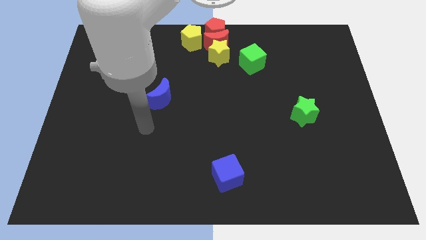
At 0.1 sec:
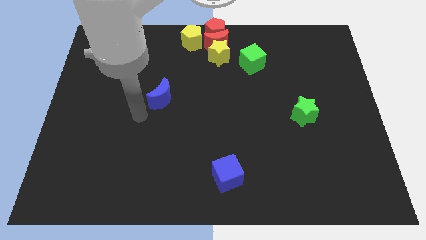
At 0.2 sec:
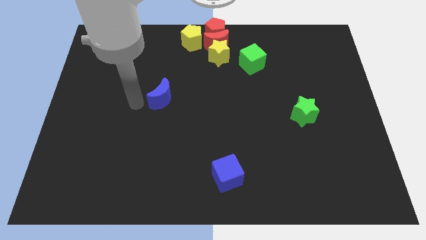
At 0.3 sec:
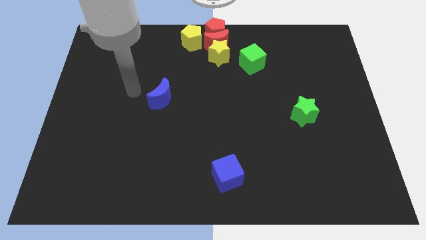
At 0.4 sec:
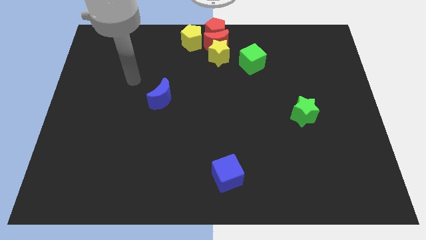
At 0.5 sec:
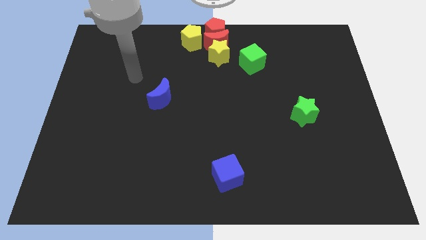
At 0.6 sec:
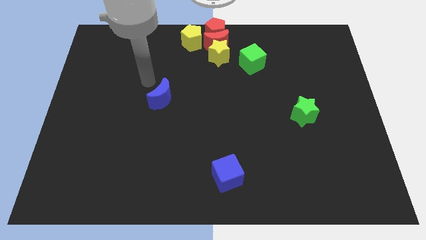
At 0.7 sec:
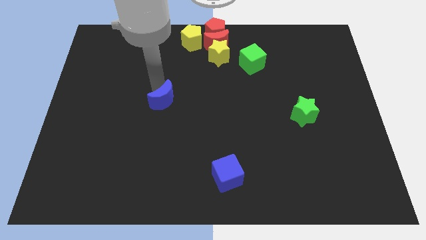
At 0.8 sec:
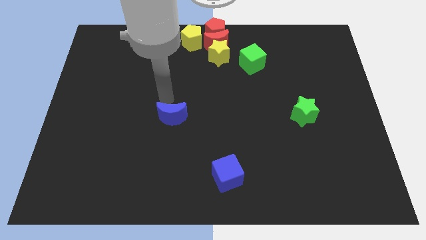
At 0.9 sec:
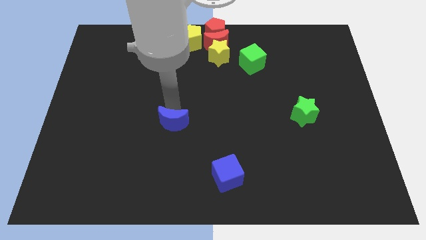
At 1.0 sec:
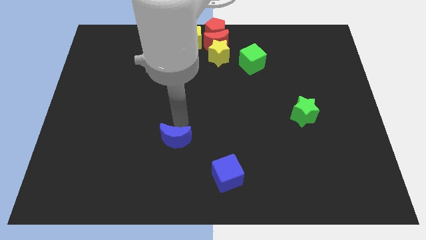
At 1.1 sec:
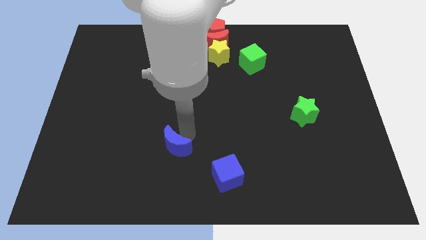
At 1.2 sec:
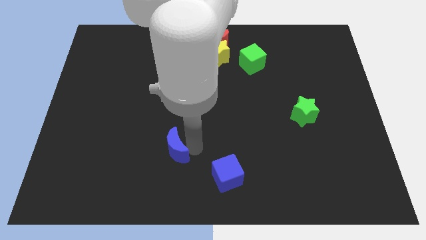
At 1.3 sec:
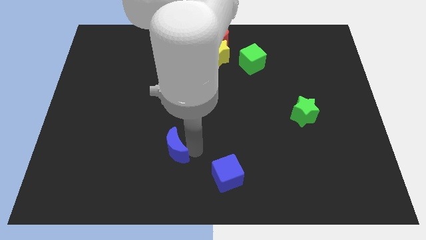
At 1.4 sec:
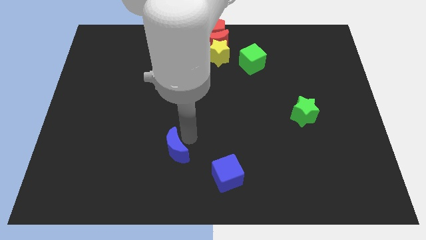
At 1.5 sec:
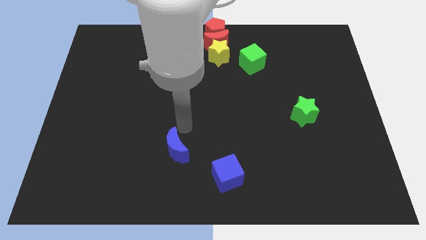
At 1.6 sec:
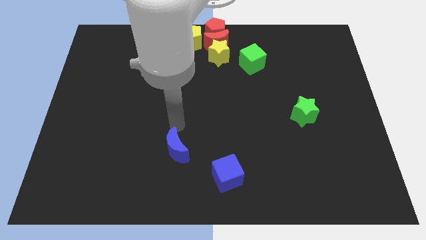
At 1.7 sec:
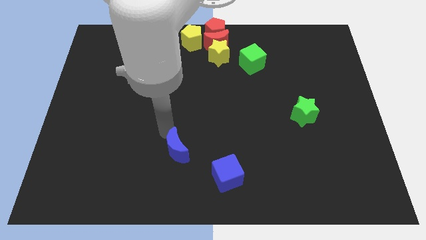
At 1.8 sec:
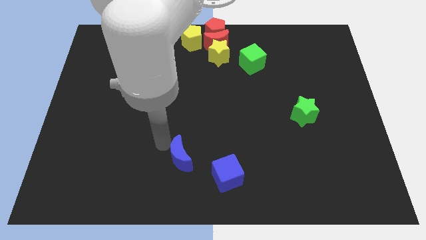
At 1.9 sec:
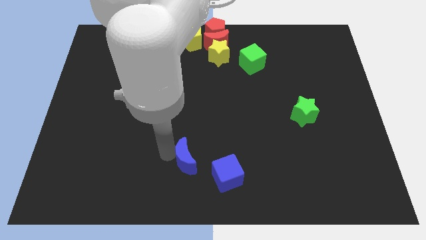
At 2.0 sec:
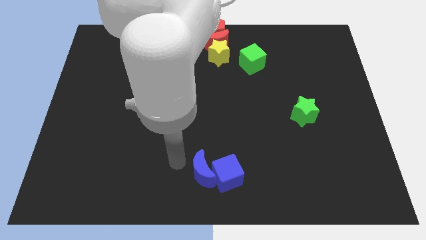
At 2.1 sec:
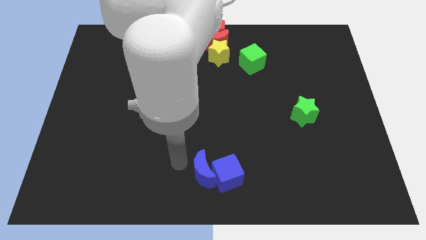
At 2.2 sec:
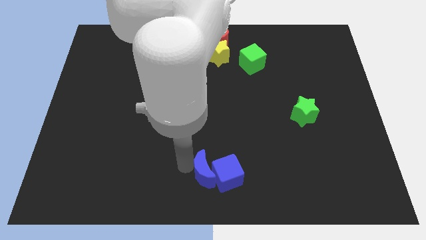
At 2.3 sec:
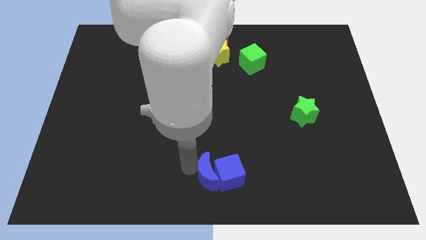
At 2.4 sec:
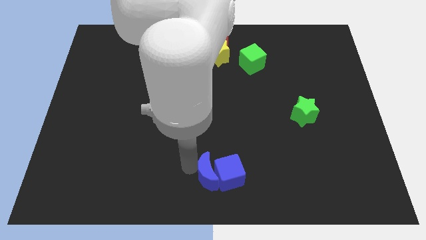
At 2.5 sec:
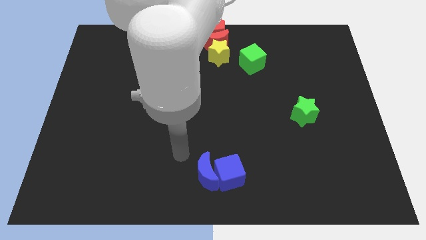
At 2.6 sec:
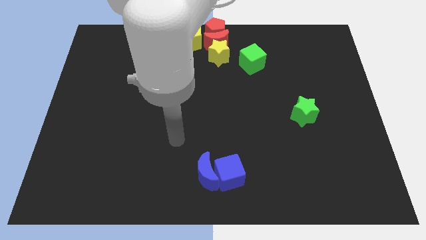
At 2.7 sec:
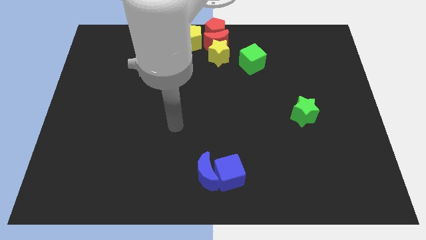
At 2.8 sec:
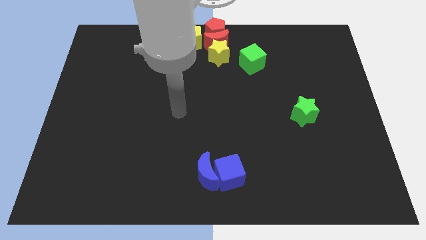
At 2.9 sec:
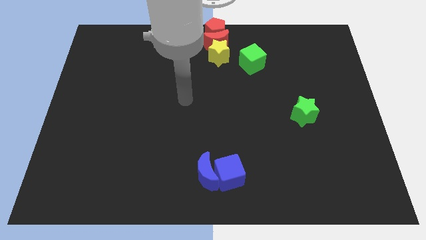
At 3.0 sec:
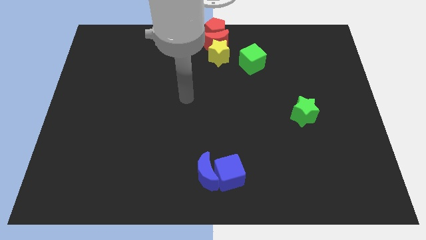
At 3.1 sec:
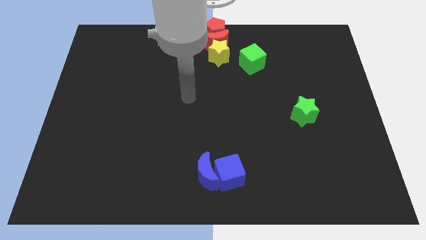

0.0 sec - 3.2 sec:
move the blue crescent to the left of the blue cube

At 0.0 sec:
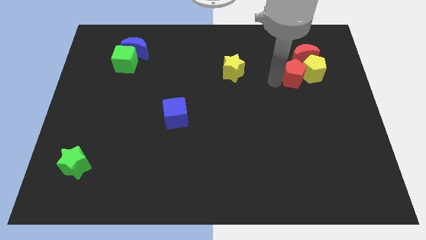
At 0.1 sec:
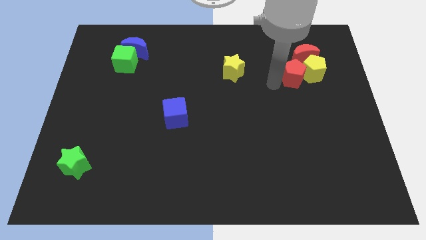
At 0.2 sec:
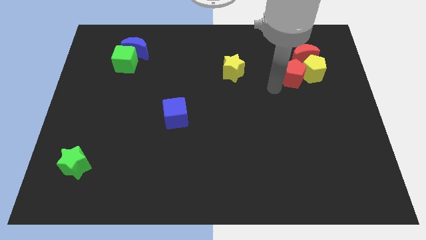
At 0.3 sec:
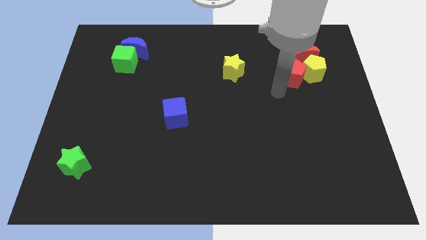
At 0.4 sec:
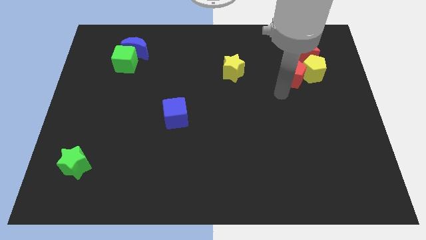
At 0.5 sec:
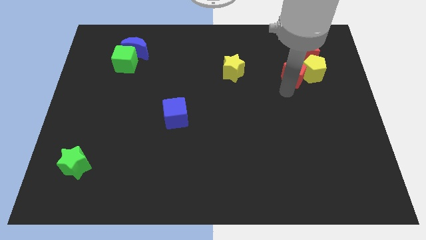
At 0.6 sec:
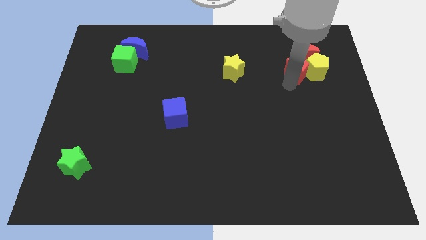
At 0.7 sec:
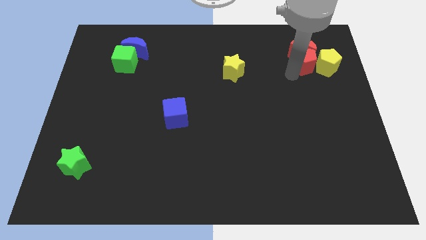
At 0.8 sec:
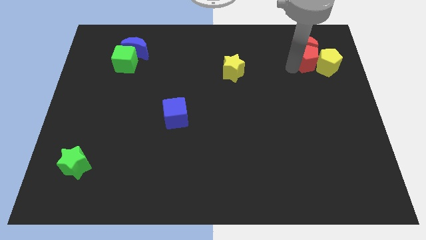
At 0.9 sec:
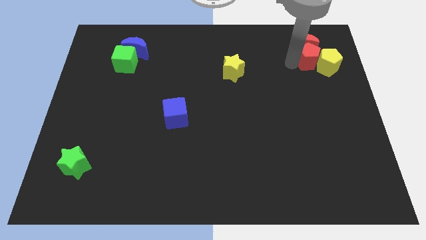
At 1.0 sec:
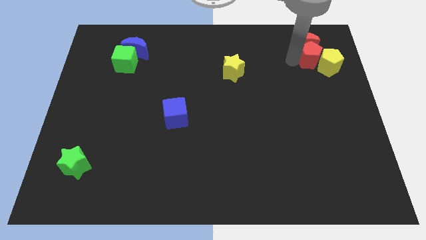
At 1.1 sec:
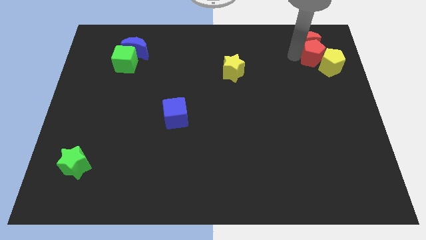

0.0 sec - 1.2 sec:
place the red pentagon below the red crescent

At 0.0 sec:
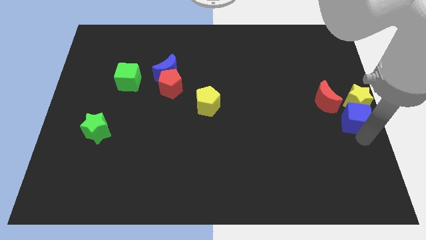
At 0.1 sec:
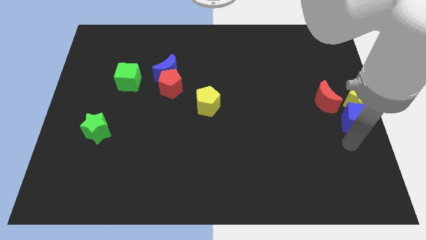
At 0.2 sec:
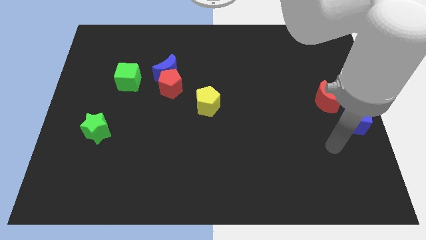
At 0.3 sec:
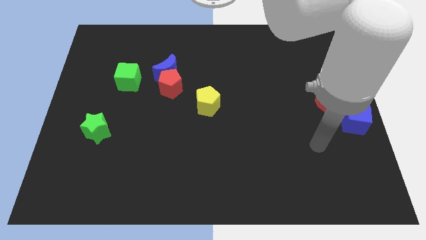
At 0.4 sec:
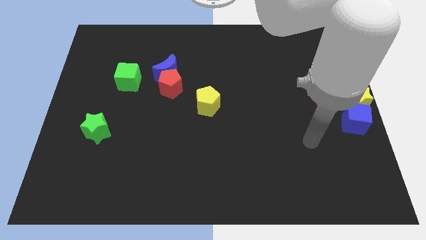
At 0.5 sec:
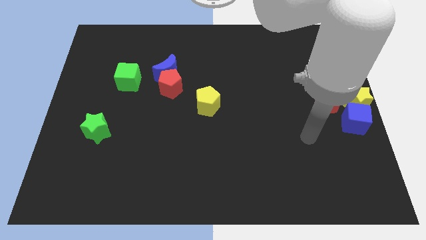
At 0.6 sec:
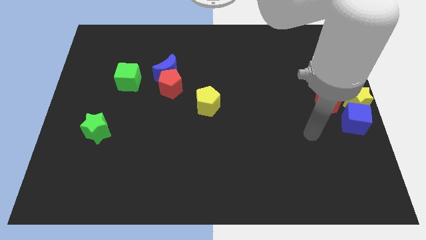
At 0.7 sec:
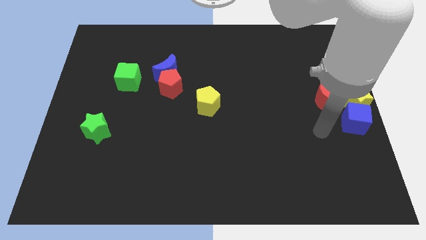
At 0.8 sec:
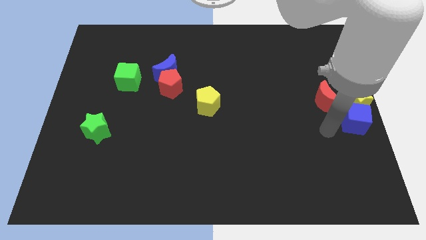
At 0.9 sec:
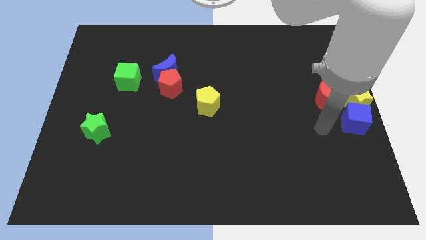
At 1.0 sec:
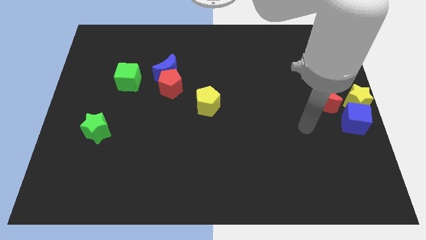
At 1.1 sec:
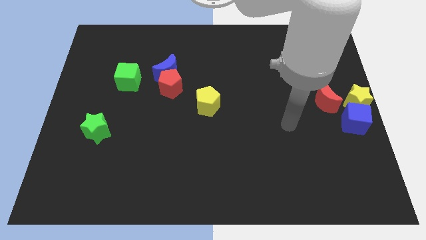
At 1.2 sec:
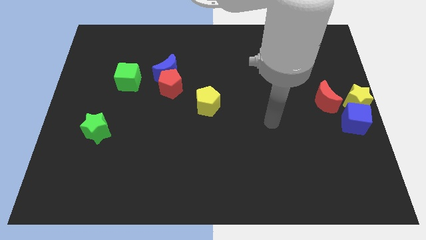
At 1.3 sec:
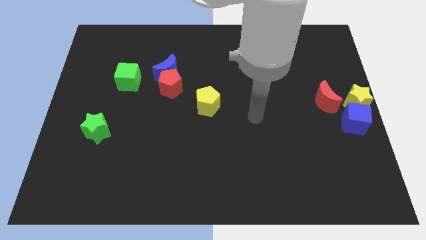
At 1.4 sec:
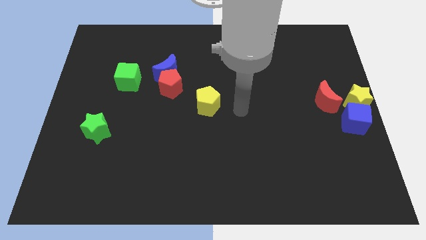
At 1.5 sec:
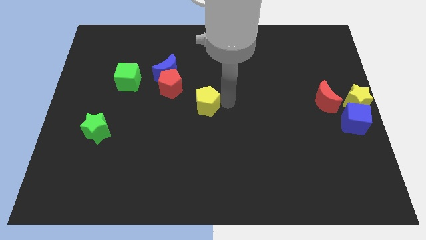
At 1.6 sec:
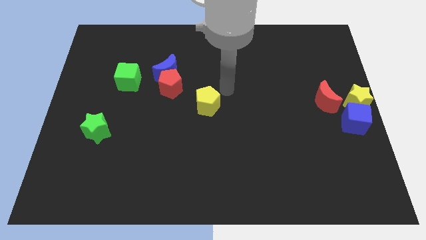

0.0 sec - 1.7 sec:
move your hand towards the yellow pentagon

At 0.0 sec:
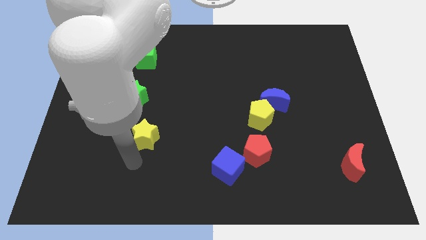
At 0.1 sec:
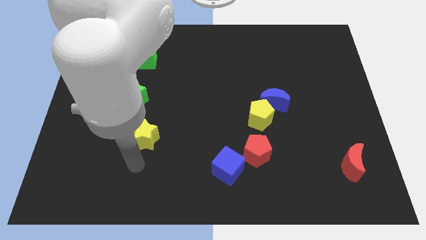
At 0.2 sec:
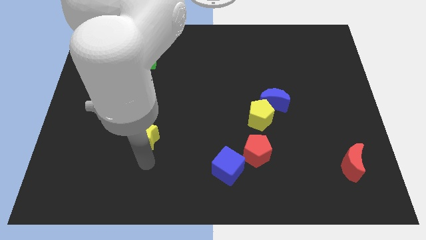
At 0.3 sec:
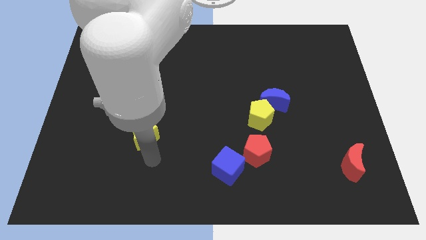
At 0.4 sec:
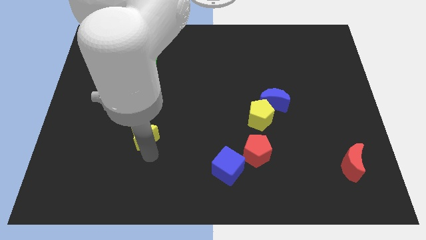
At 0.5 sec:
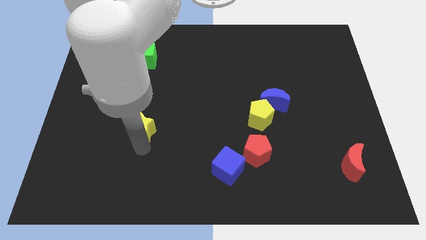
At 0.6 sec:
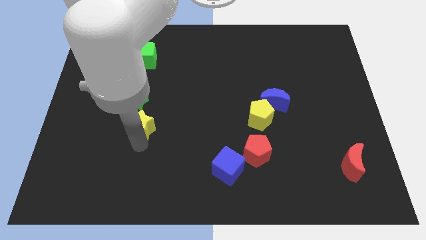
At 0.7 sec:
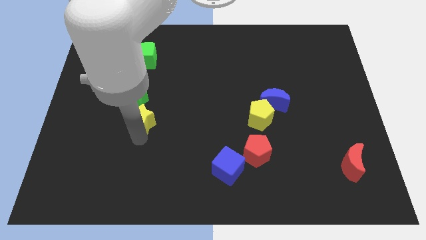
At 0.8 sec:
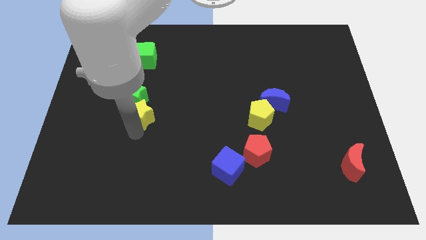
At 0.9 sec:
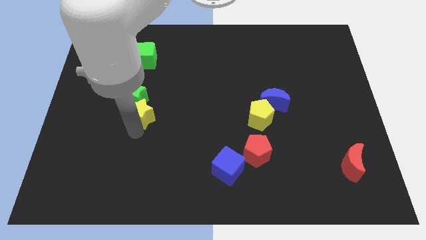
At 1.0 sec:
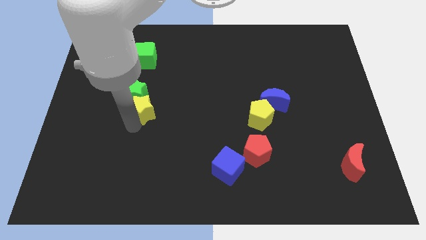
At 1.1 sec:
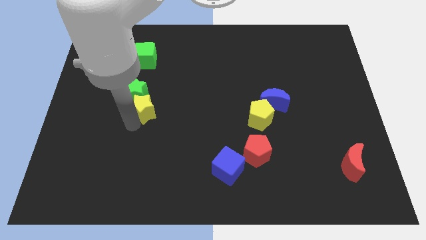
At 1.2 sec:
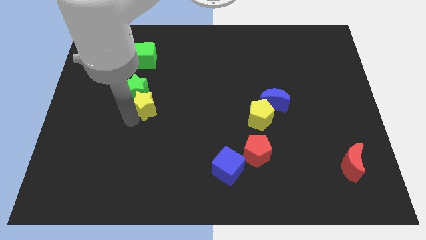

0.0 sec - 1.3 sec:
move yellow star into green star

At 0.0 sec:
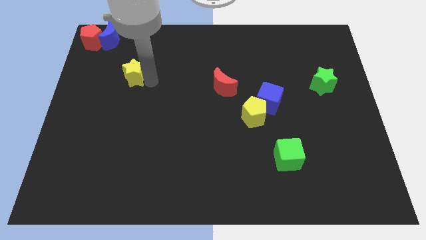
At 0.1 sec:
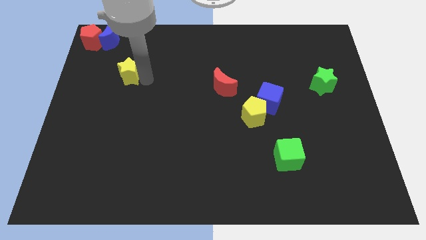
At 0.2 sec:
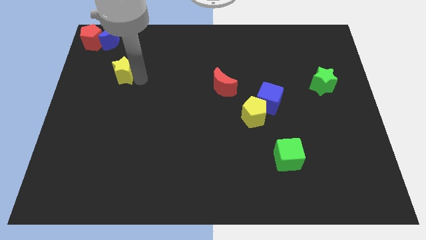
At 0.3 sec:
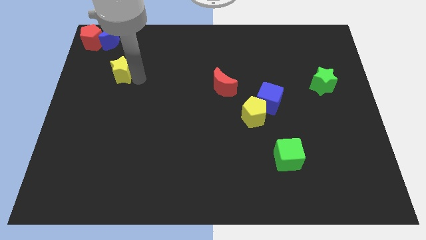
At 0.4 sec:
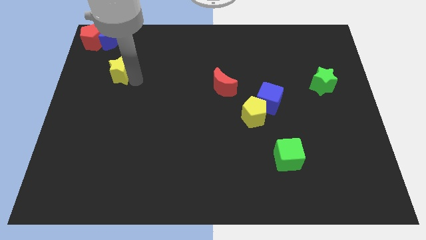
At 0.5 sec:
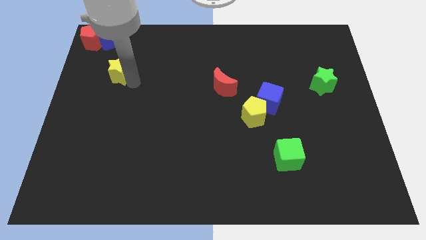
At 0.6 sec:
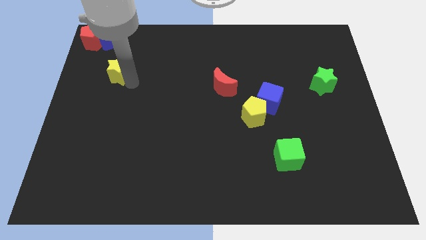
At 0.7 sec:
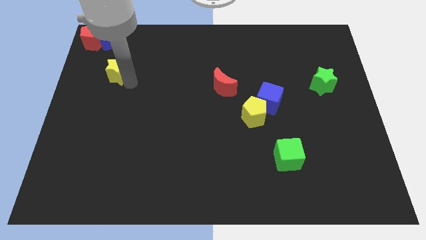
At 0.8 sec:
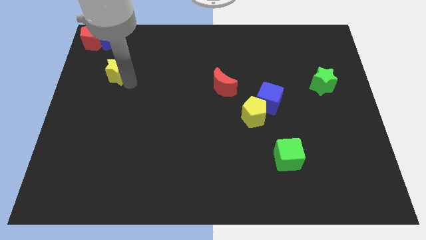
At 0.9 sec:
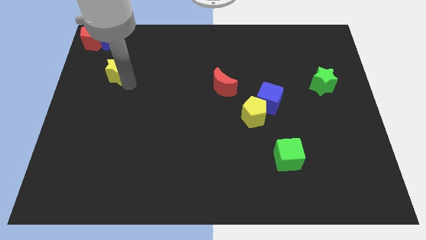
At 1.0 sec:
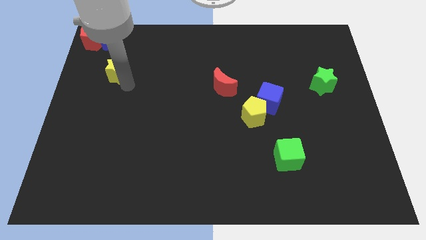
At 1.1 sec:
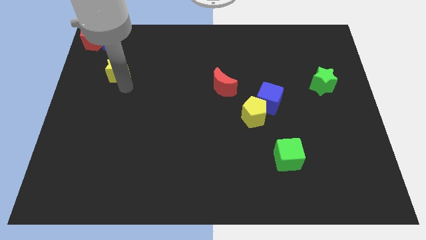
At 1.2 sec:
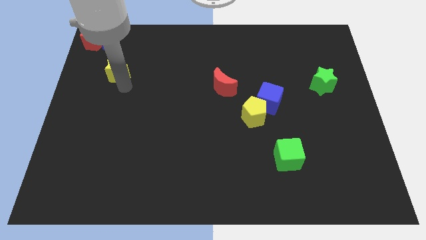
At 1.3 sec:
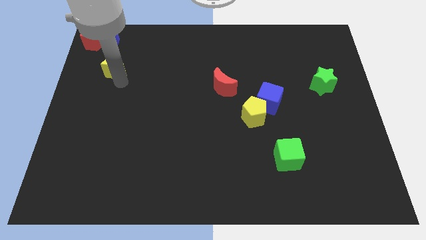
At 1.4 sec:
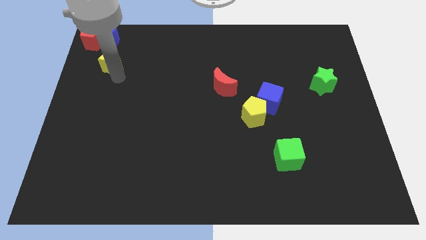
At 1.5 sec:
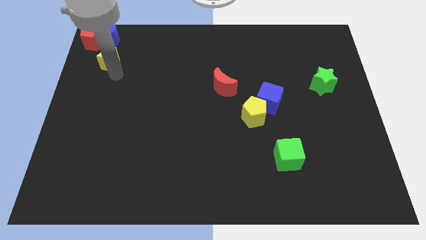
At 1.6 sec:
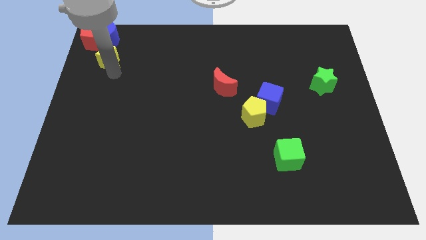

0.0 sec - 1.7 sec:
point your arm at the bottom of the yellow star
